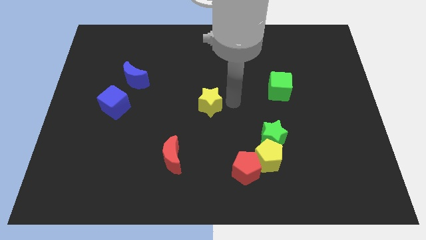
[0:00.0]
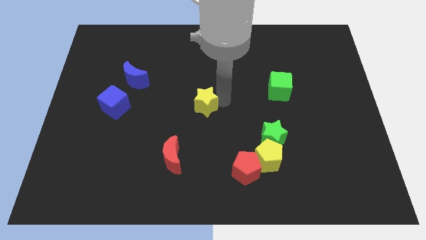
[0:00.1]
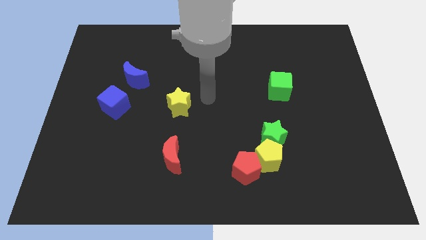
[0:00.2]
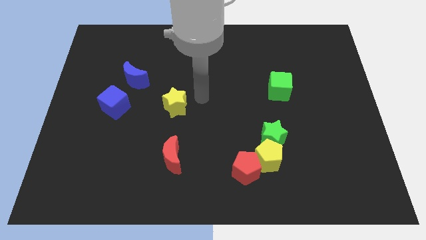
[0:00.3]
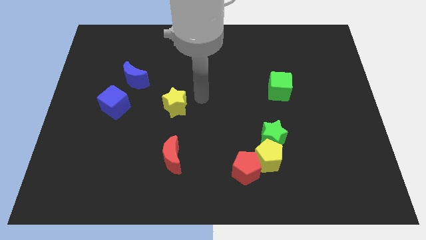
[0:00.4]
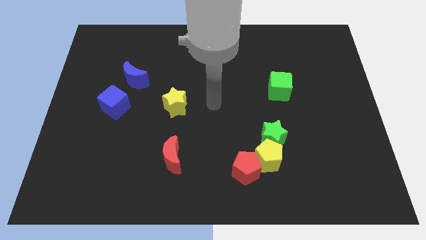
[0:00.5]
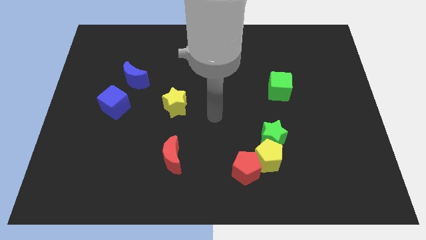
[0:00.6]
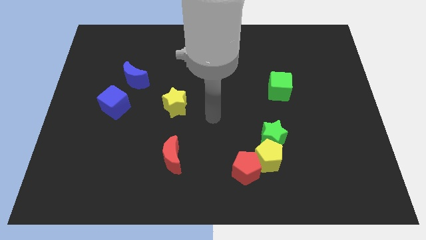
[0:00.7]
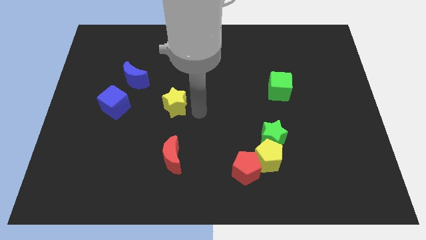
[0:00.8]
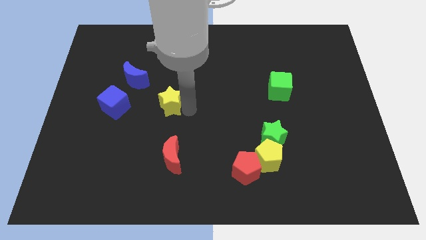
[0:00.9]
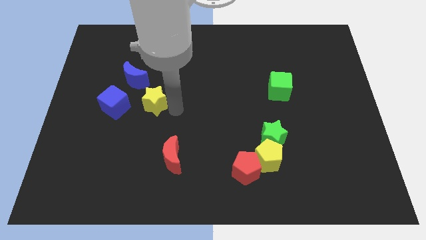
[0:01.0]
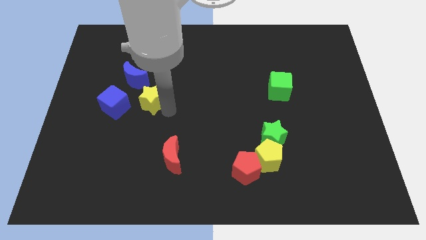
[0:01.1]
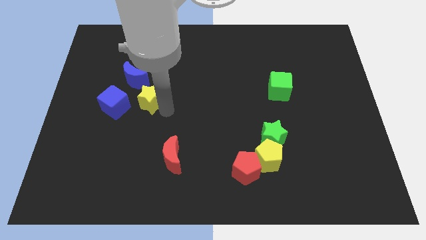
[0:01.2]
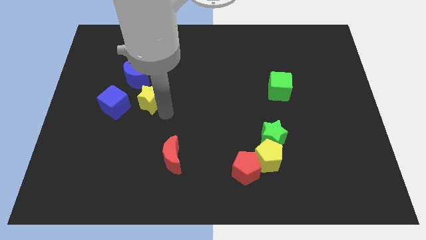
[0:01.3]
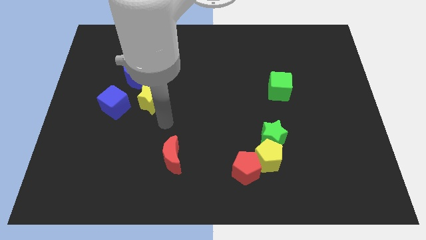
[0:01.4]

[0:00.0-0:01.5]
place the yellow star below the blue crescent

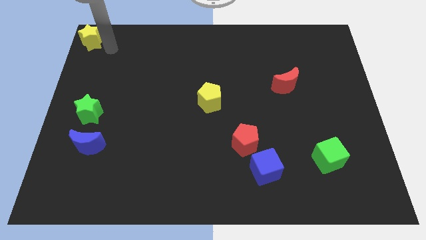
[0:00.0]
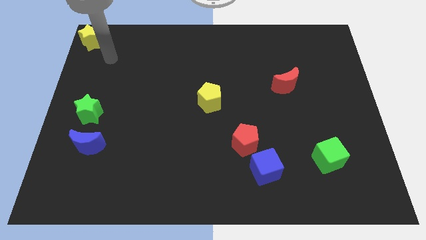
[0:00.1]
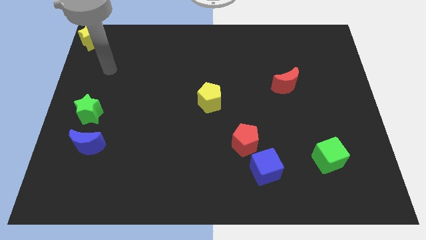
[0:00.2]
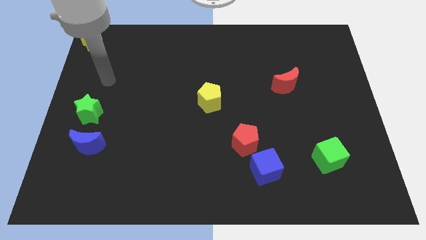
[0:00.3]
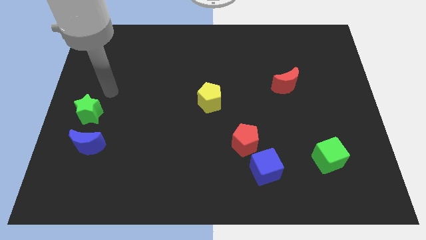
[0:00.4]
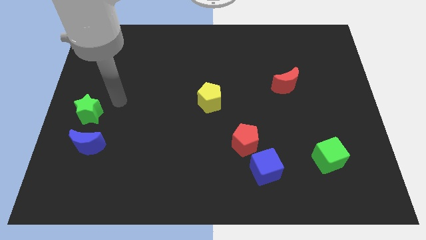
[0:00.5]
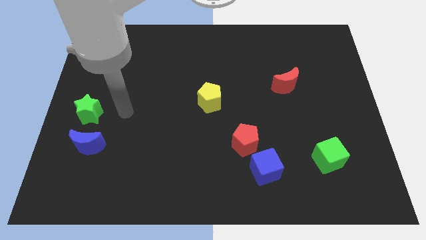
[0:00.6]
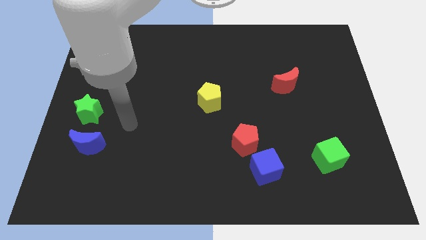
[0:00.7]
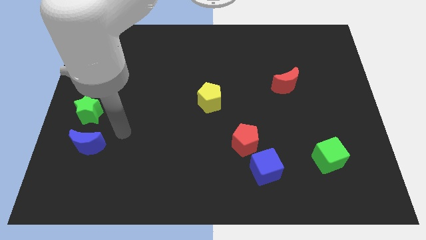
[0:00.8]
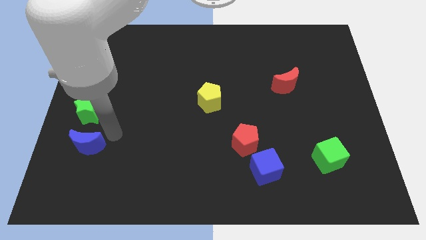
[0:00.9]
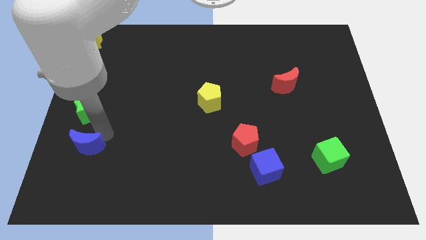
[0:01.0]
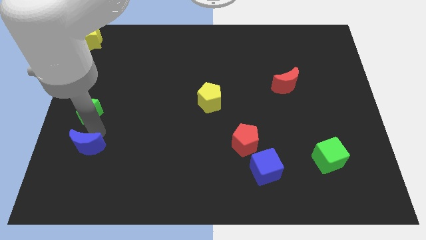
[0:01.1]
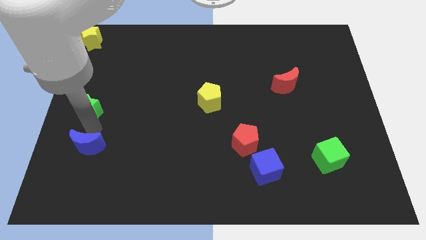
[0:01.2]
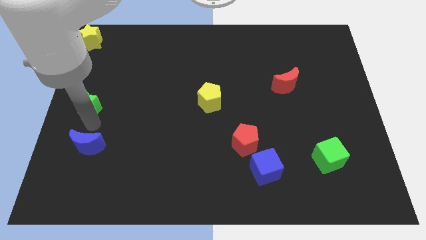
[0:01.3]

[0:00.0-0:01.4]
touch the botom side of the green star

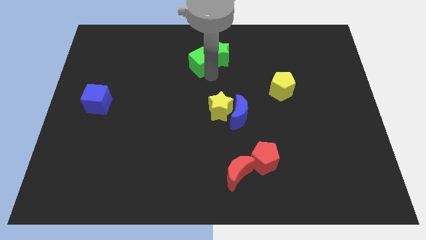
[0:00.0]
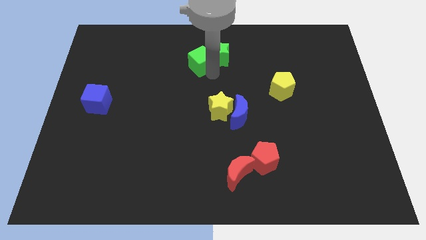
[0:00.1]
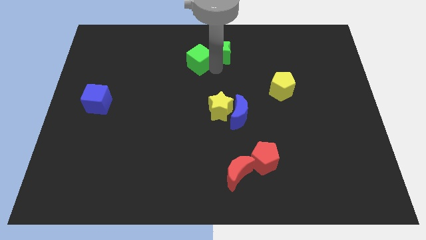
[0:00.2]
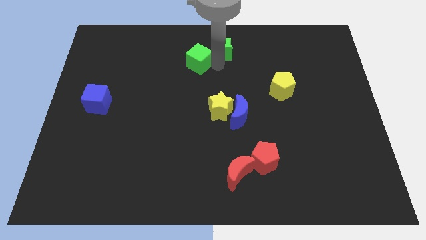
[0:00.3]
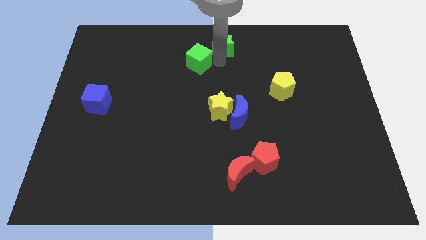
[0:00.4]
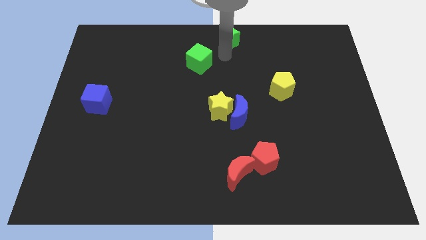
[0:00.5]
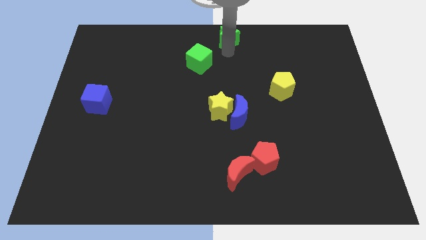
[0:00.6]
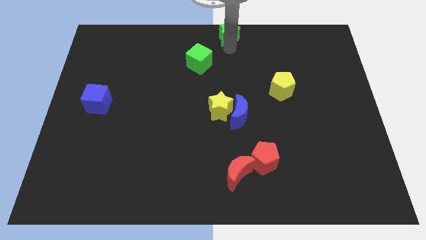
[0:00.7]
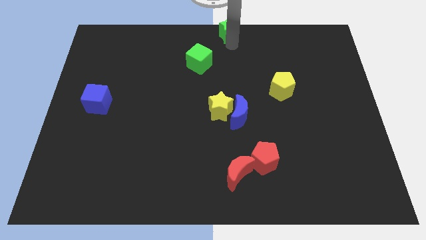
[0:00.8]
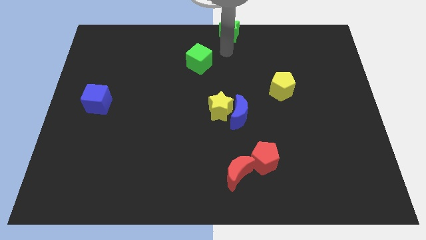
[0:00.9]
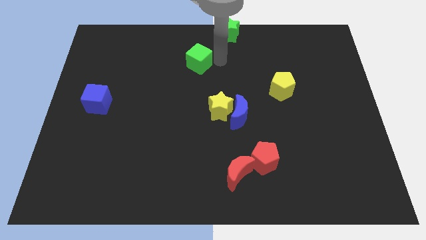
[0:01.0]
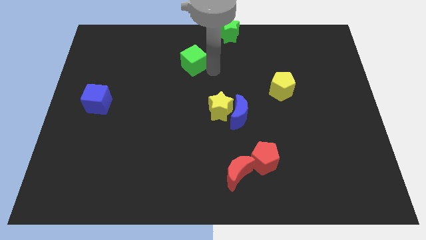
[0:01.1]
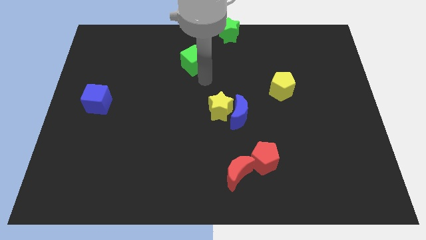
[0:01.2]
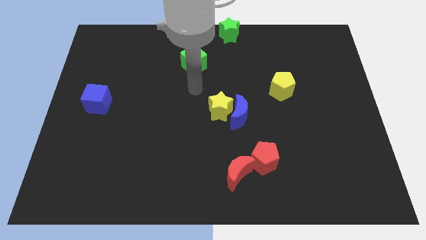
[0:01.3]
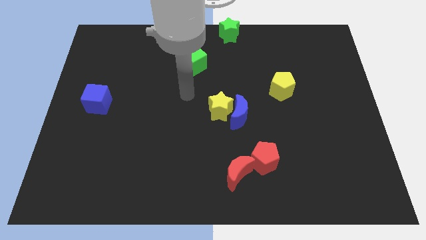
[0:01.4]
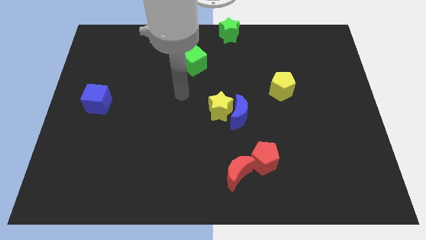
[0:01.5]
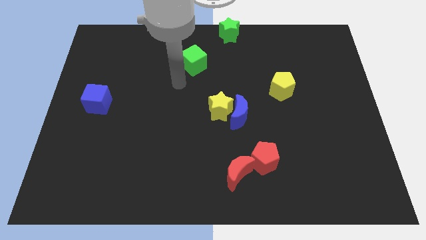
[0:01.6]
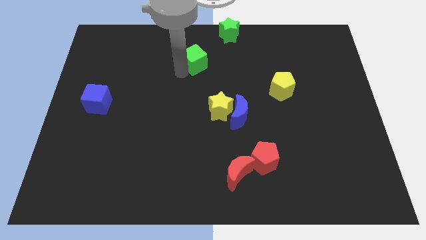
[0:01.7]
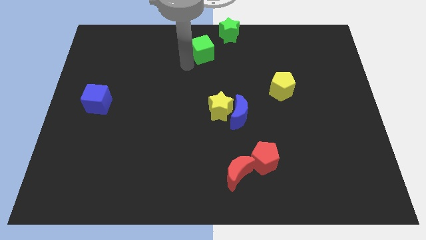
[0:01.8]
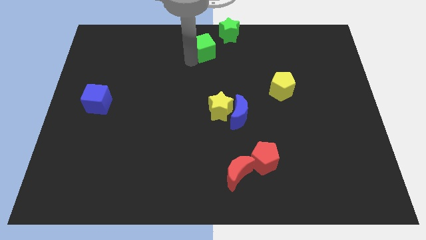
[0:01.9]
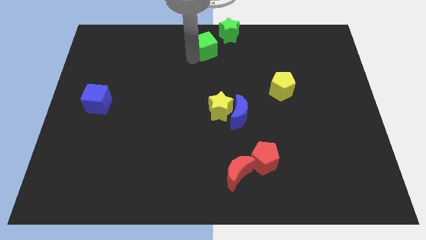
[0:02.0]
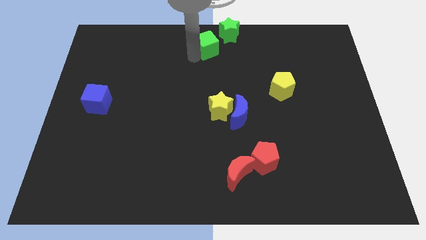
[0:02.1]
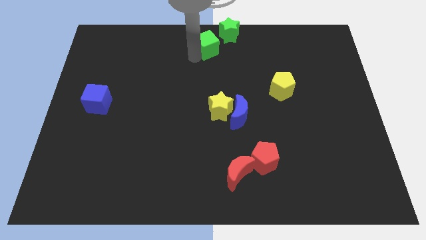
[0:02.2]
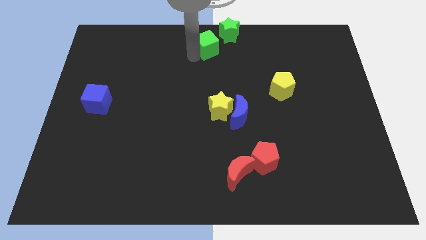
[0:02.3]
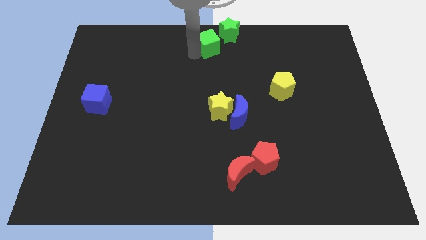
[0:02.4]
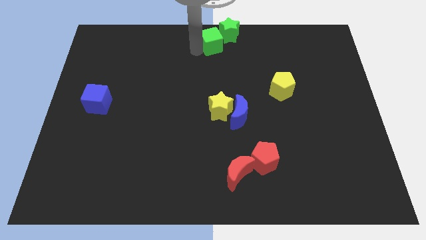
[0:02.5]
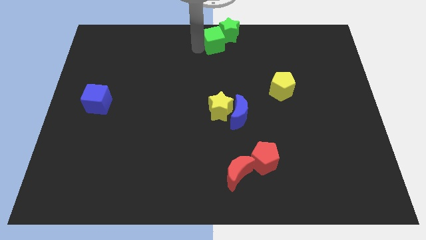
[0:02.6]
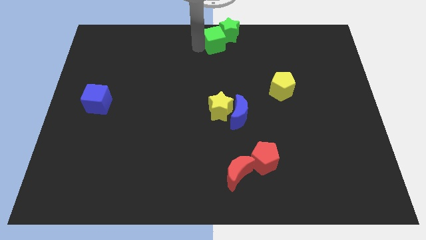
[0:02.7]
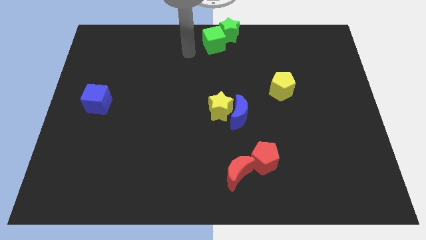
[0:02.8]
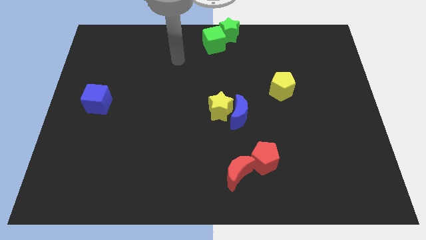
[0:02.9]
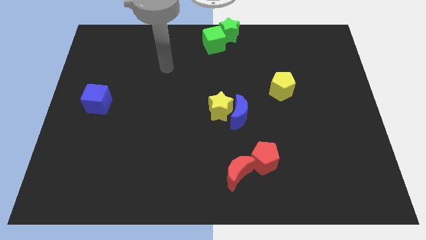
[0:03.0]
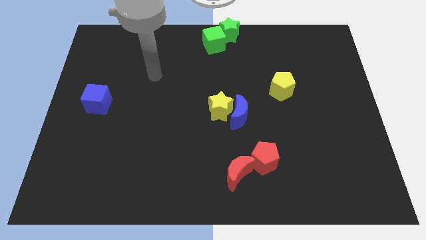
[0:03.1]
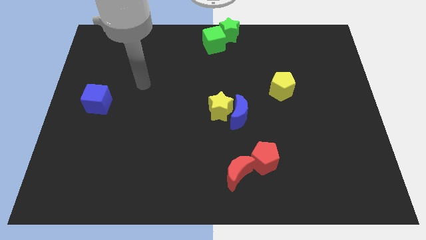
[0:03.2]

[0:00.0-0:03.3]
place the green blocks at the top center

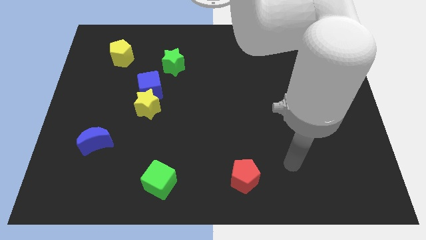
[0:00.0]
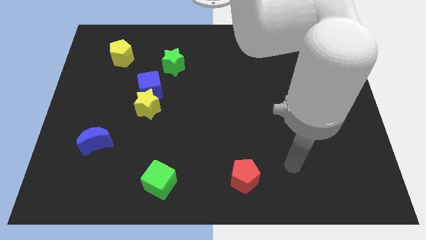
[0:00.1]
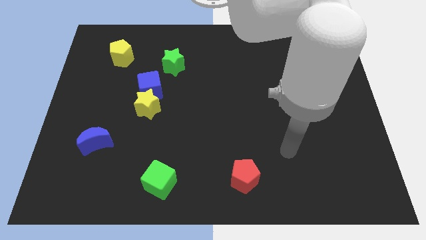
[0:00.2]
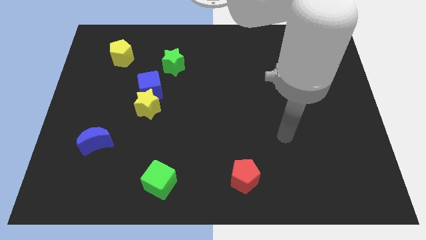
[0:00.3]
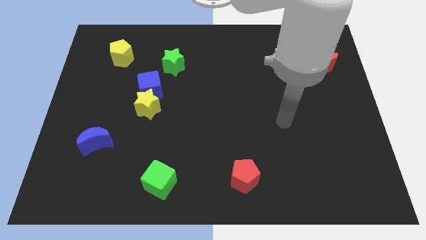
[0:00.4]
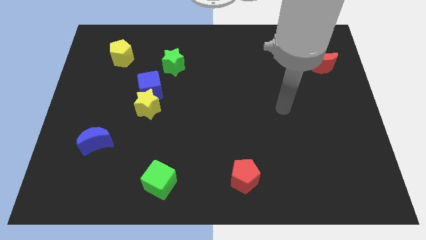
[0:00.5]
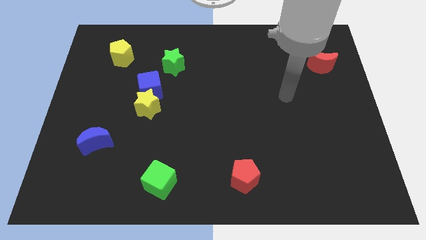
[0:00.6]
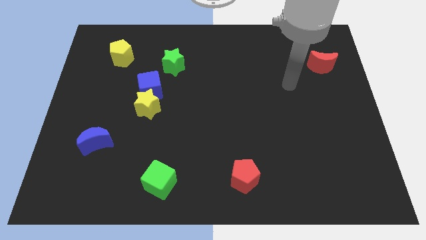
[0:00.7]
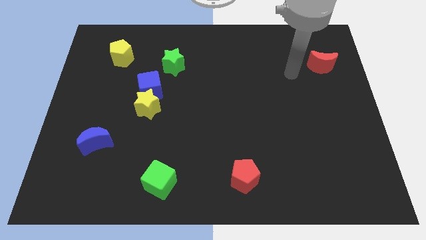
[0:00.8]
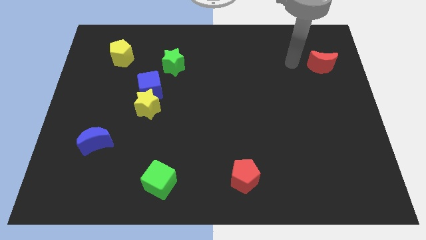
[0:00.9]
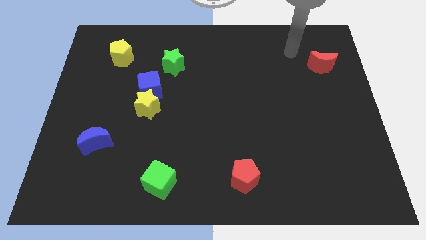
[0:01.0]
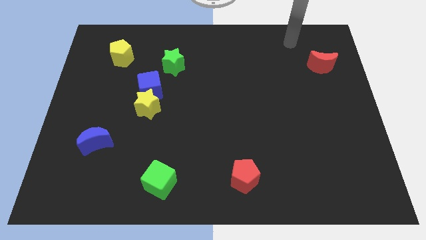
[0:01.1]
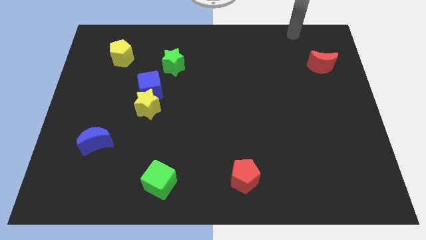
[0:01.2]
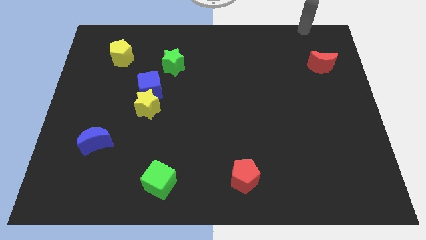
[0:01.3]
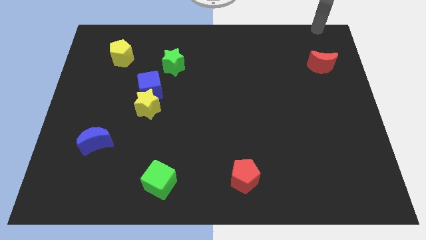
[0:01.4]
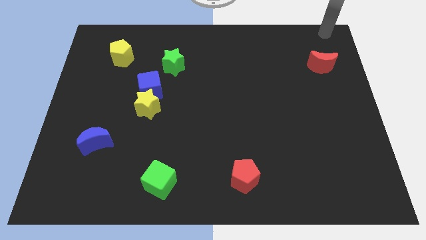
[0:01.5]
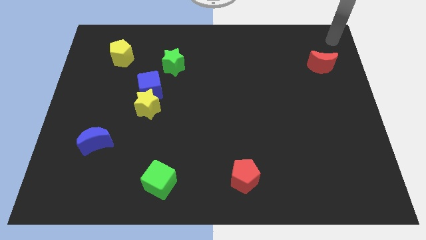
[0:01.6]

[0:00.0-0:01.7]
place your arm to the top of red moon

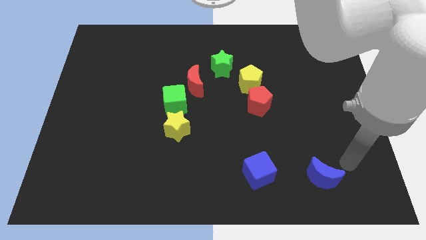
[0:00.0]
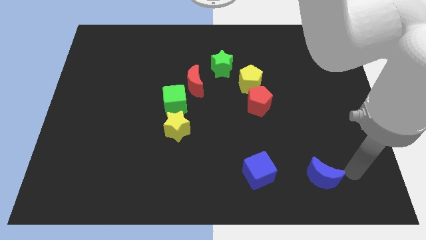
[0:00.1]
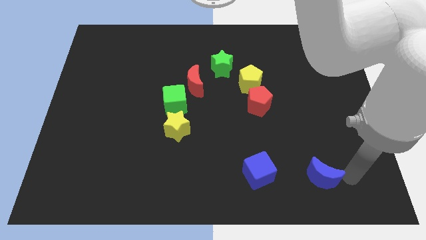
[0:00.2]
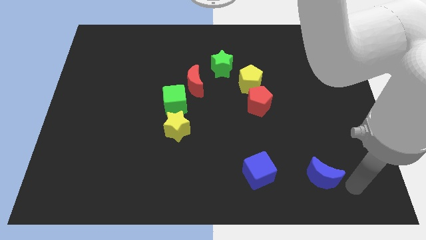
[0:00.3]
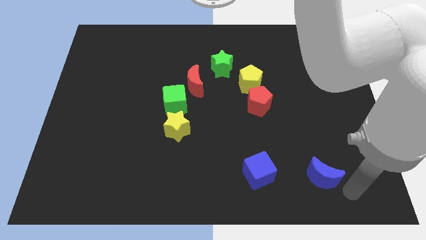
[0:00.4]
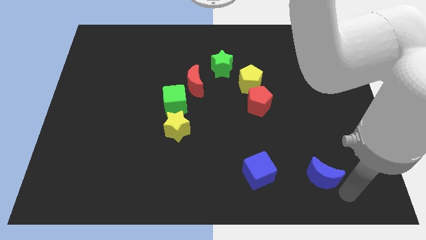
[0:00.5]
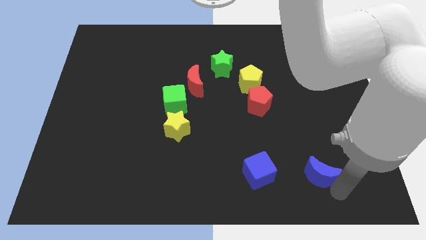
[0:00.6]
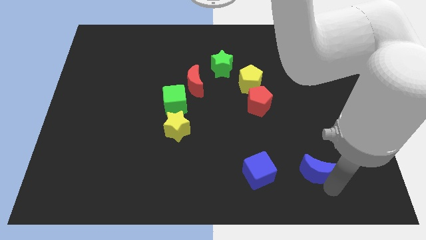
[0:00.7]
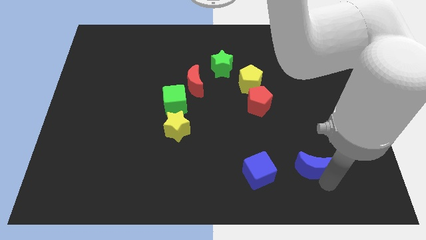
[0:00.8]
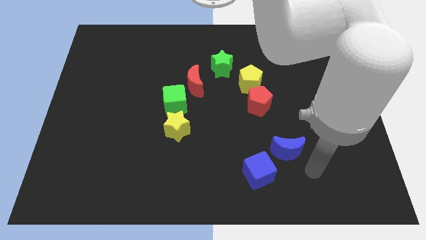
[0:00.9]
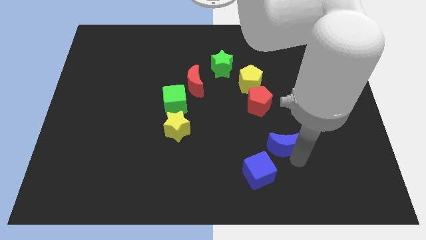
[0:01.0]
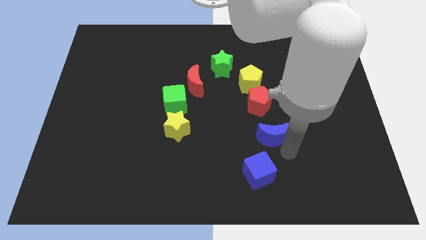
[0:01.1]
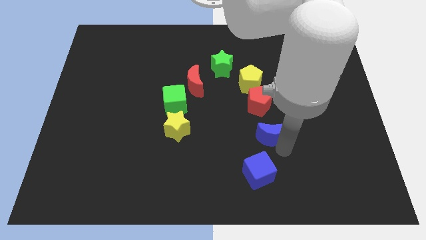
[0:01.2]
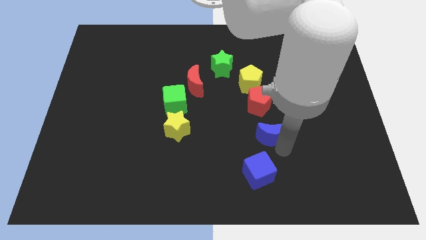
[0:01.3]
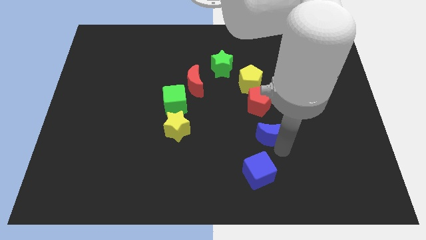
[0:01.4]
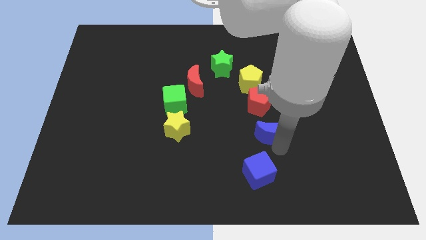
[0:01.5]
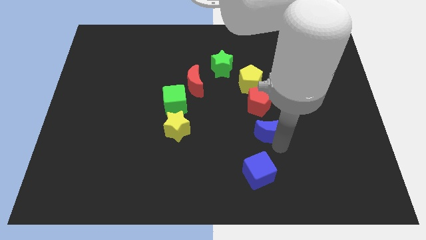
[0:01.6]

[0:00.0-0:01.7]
push the blue crescent to the bottom of the red pentagon
